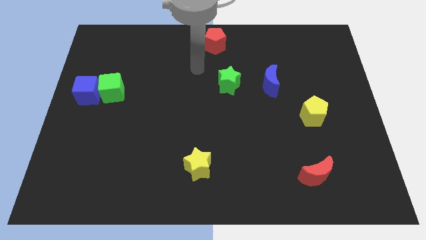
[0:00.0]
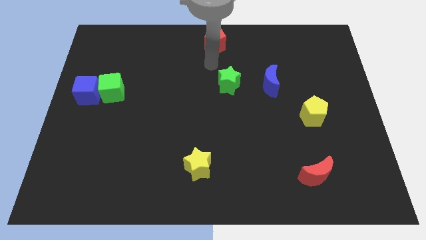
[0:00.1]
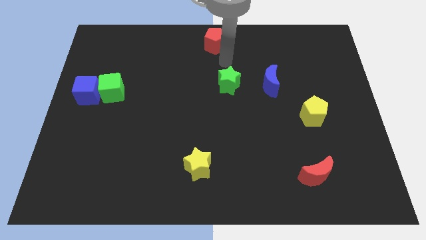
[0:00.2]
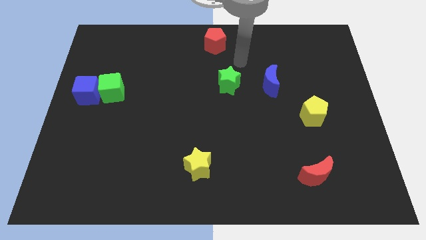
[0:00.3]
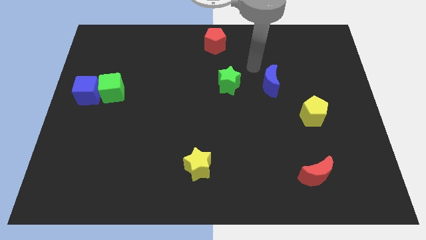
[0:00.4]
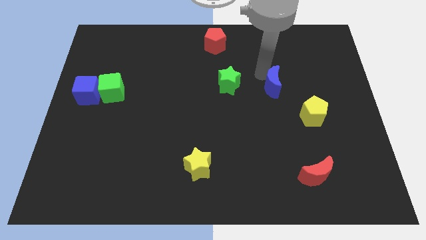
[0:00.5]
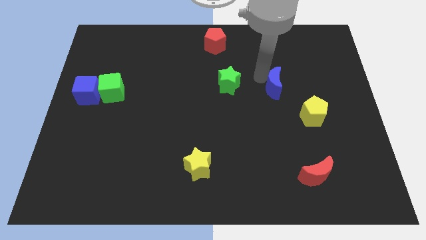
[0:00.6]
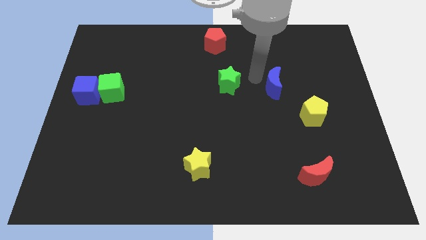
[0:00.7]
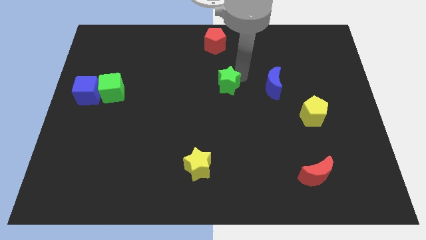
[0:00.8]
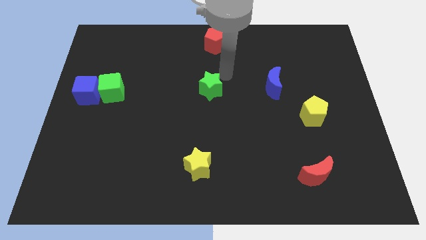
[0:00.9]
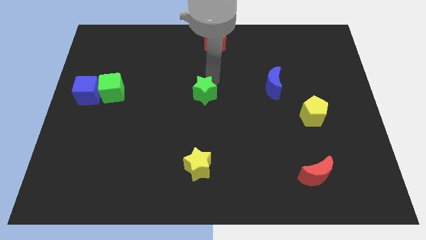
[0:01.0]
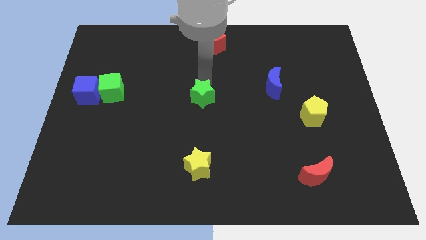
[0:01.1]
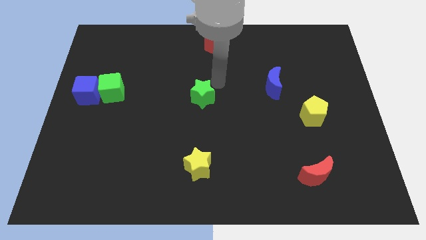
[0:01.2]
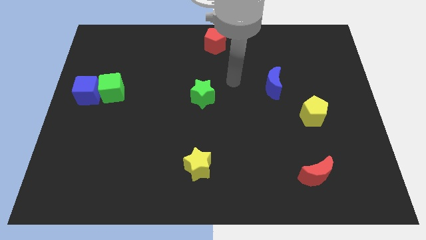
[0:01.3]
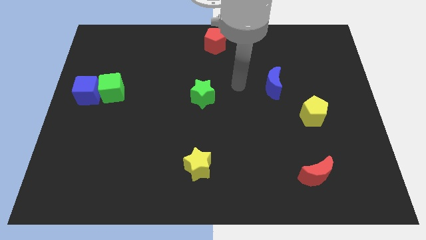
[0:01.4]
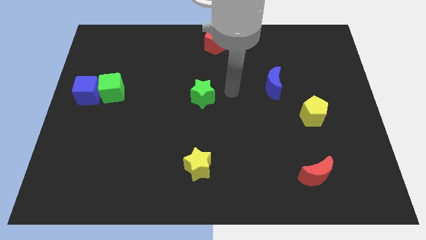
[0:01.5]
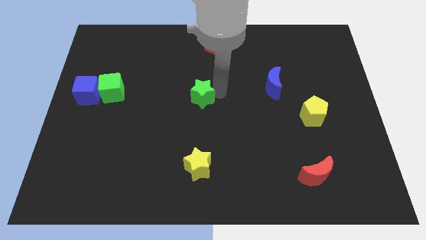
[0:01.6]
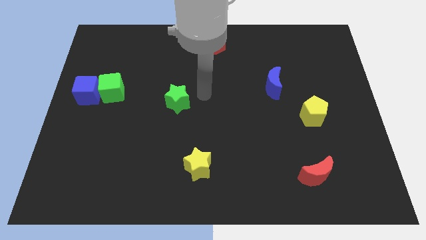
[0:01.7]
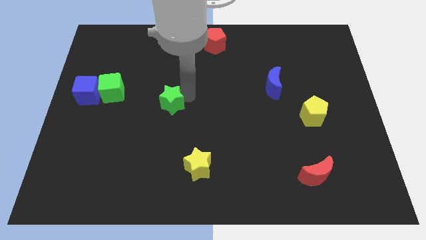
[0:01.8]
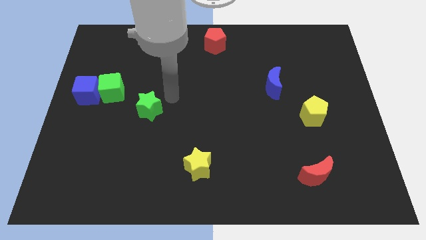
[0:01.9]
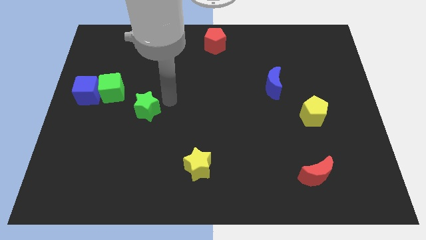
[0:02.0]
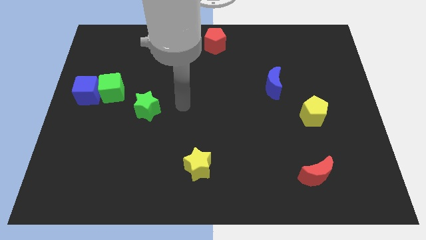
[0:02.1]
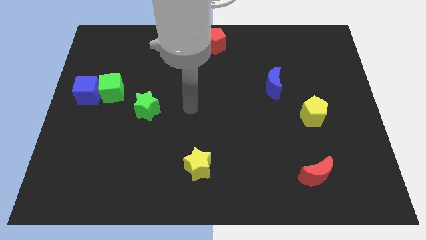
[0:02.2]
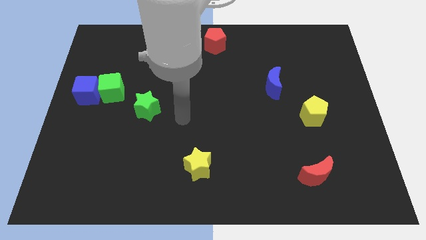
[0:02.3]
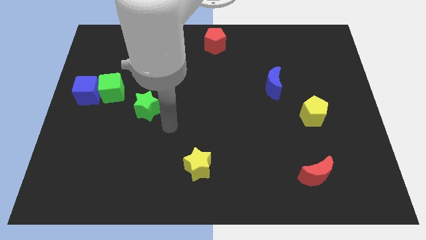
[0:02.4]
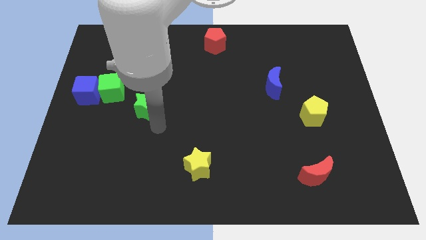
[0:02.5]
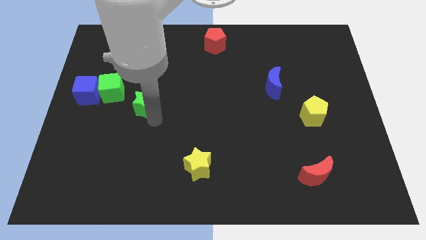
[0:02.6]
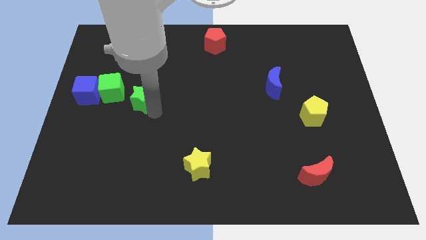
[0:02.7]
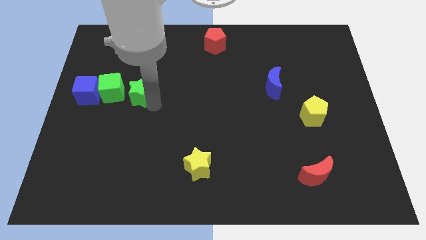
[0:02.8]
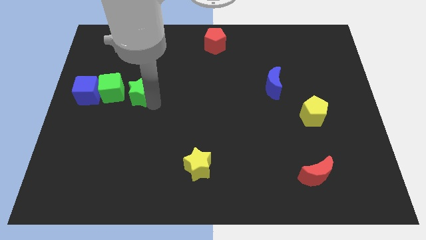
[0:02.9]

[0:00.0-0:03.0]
move green star towards green cube

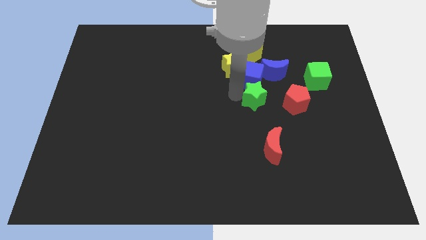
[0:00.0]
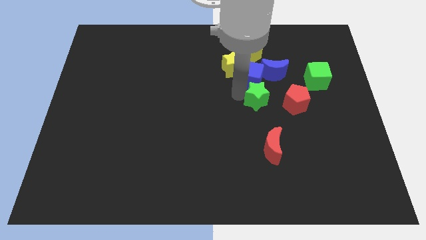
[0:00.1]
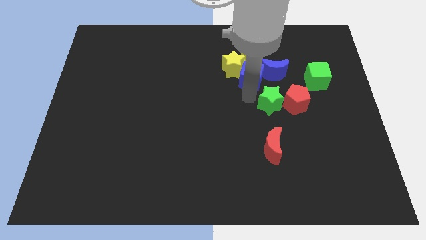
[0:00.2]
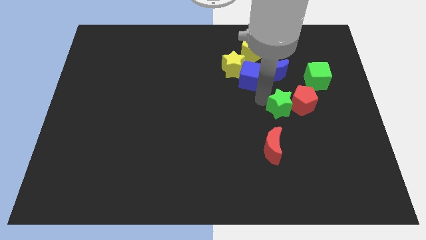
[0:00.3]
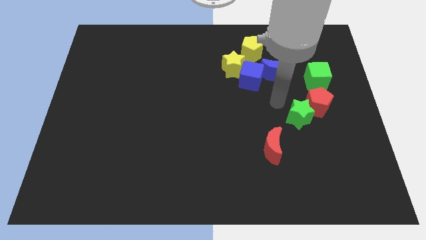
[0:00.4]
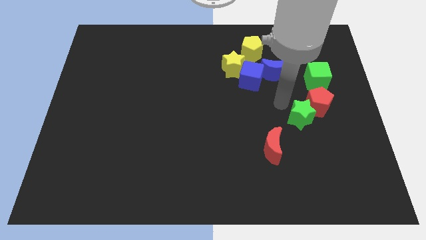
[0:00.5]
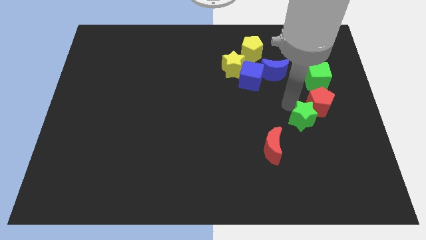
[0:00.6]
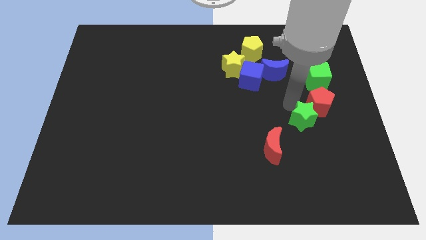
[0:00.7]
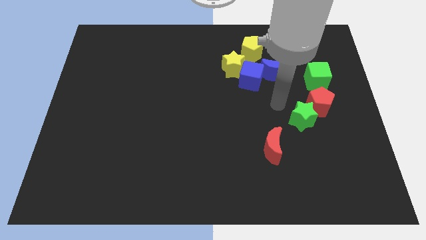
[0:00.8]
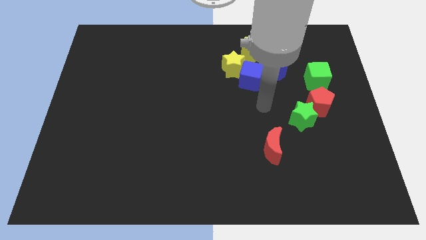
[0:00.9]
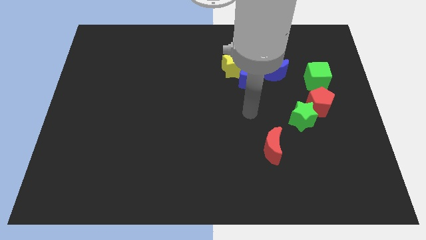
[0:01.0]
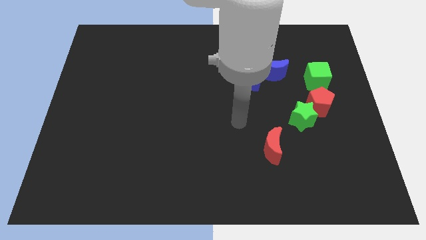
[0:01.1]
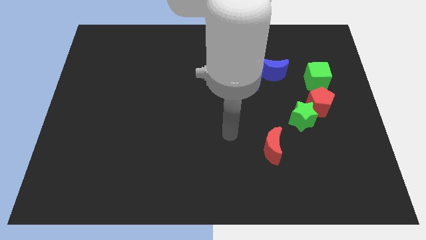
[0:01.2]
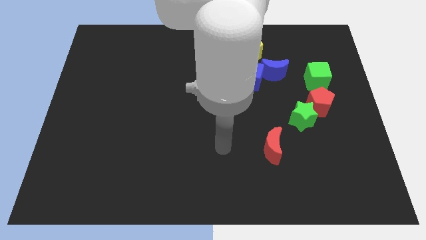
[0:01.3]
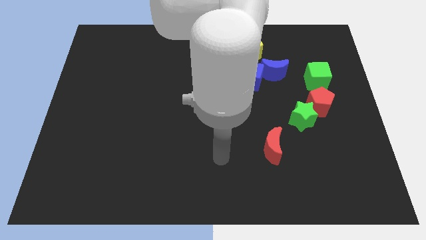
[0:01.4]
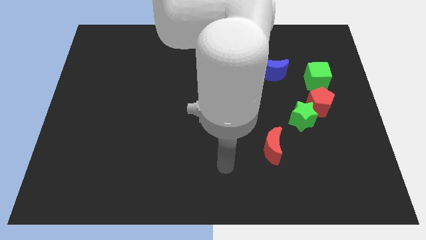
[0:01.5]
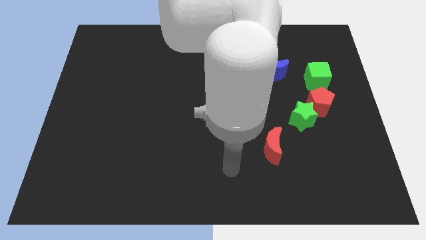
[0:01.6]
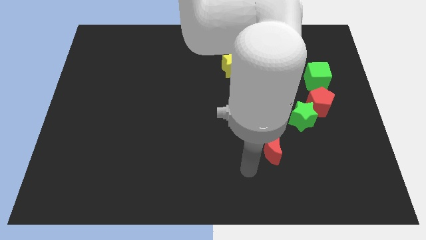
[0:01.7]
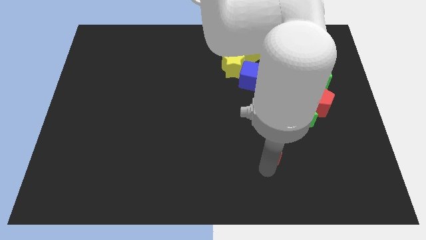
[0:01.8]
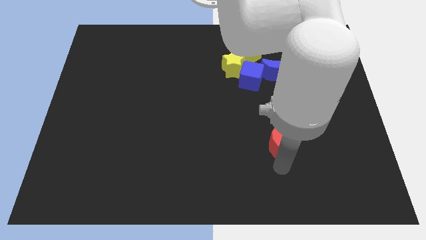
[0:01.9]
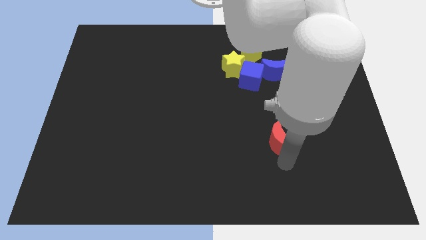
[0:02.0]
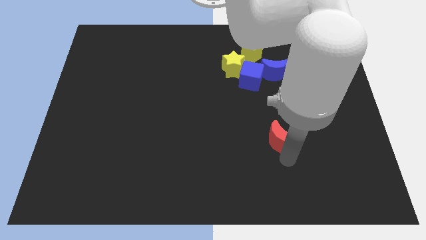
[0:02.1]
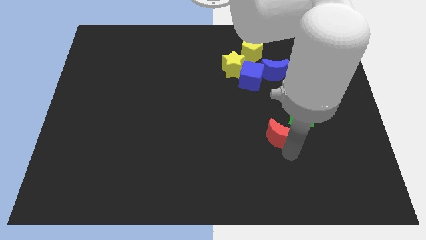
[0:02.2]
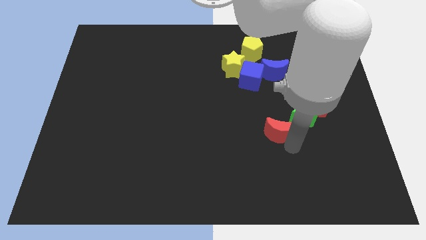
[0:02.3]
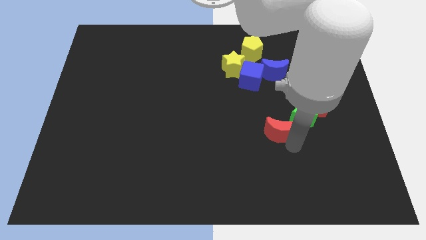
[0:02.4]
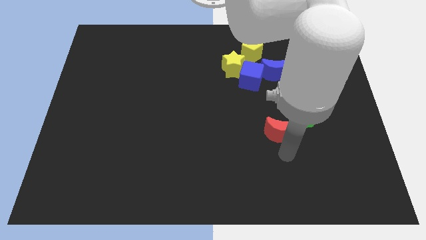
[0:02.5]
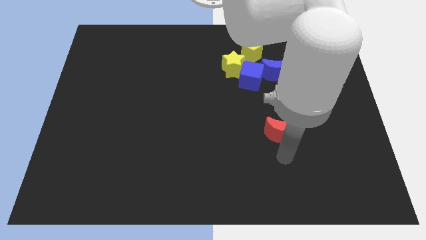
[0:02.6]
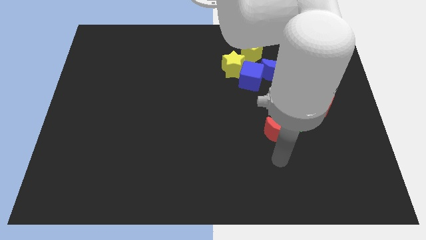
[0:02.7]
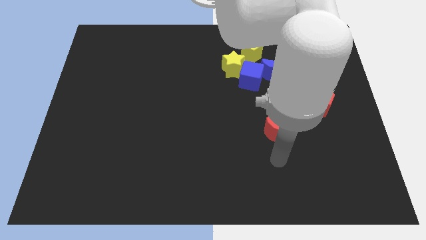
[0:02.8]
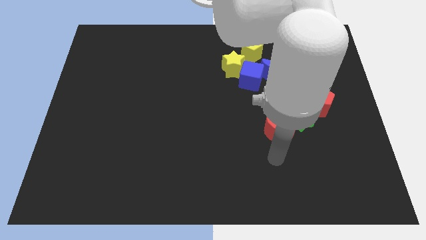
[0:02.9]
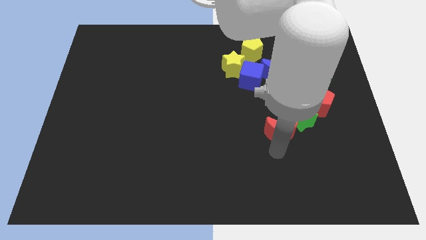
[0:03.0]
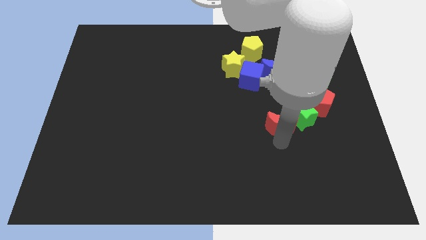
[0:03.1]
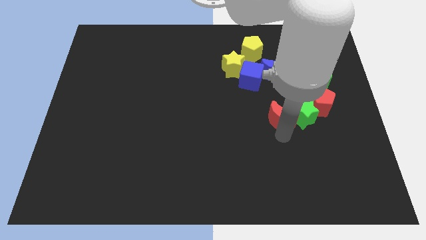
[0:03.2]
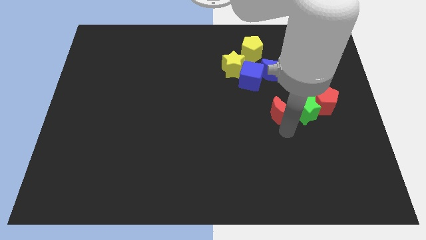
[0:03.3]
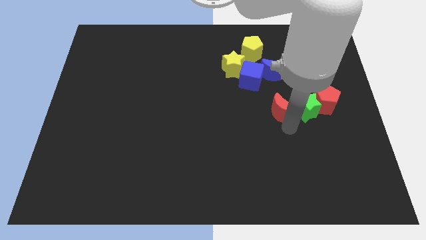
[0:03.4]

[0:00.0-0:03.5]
place the green star in between the red blocks

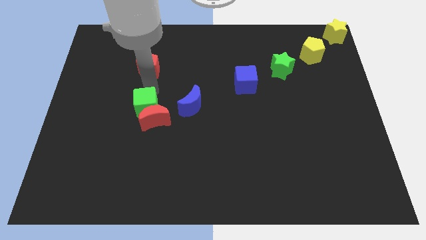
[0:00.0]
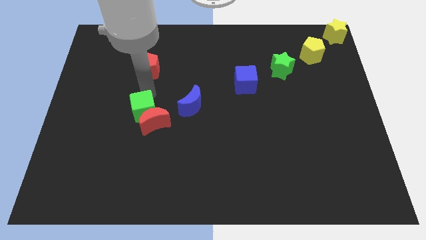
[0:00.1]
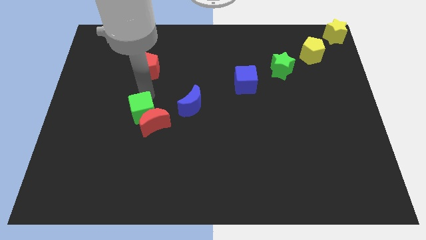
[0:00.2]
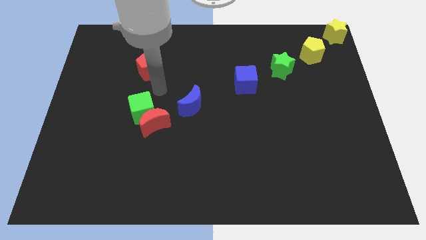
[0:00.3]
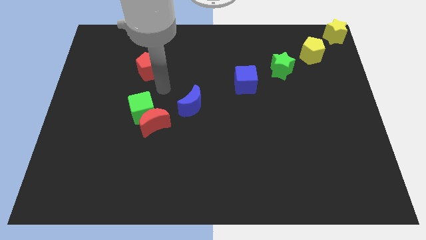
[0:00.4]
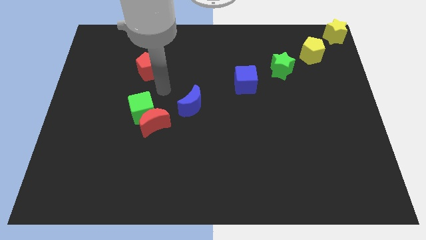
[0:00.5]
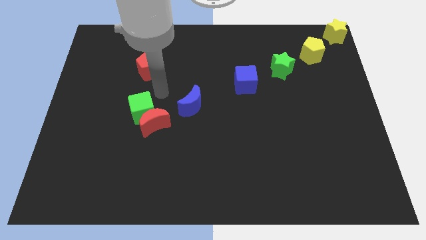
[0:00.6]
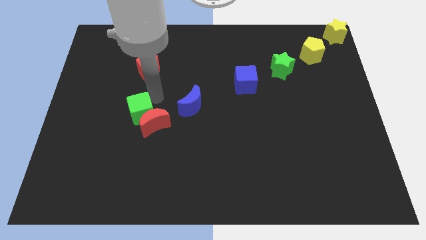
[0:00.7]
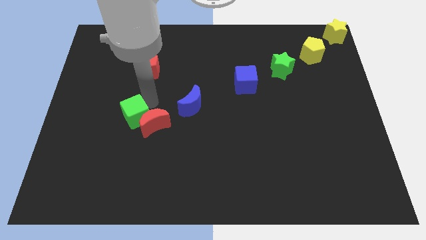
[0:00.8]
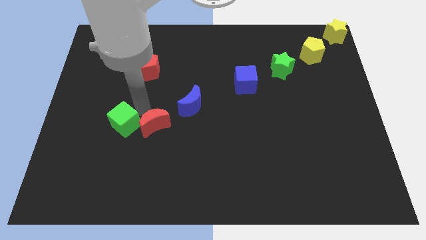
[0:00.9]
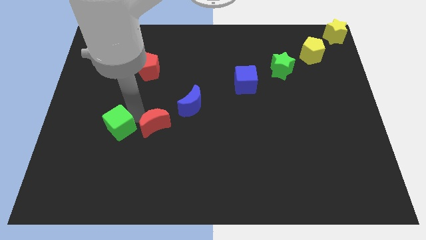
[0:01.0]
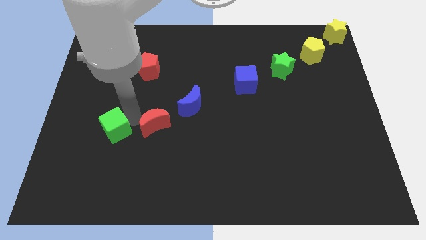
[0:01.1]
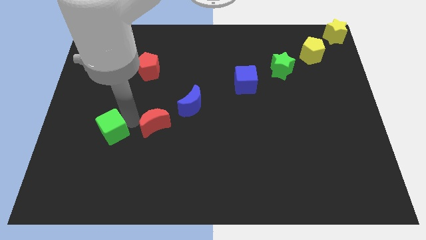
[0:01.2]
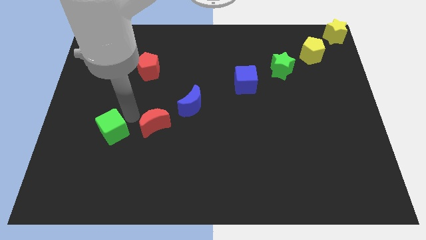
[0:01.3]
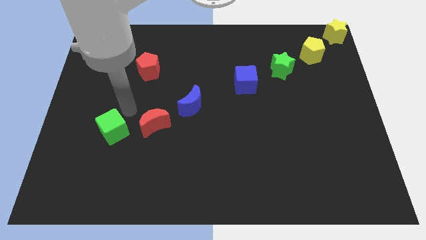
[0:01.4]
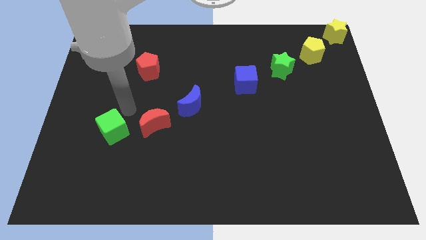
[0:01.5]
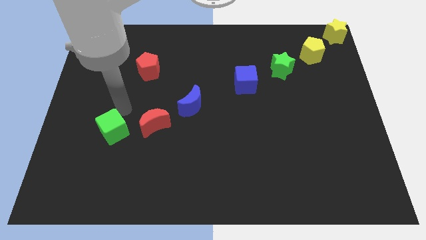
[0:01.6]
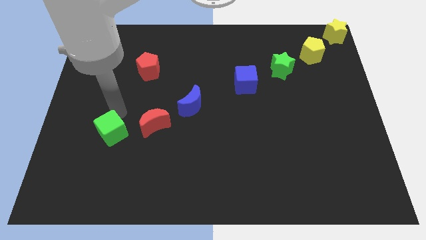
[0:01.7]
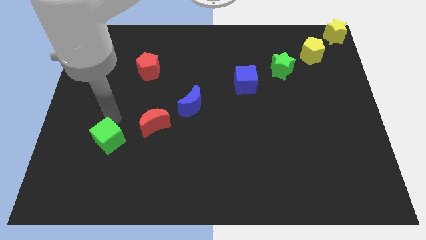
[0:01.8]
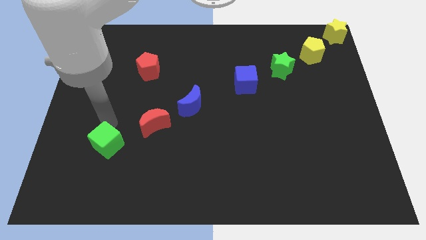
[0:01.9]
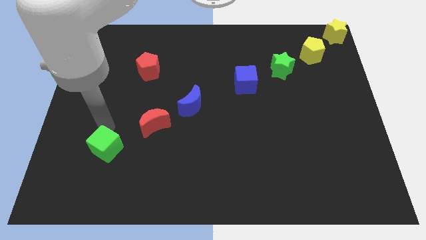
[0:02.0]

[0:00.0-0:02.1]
move the green cube away from the red moon

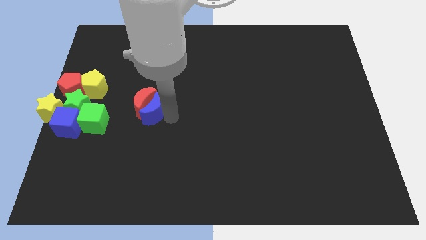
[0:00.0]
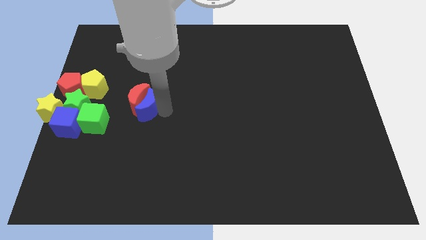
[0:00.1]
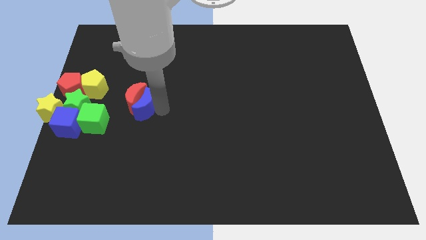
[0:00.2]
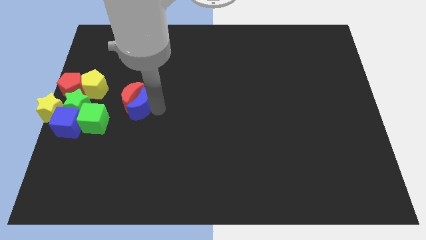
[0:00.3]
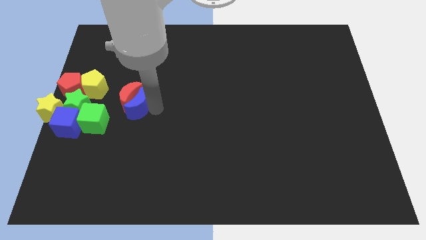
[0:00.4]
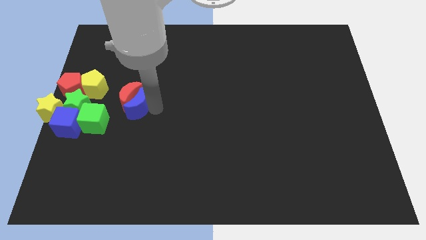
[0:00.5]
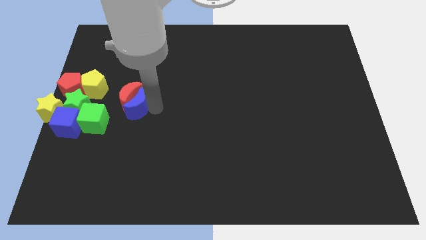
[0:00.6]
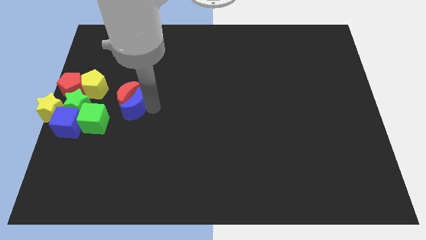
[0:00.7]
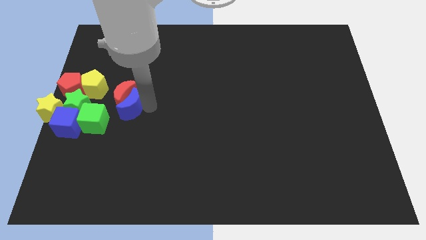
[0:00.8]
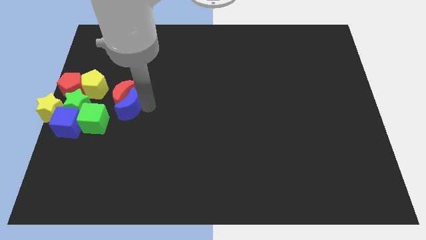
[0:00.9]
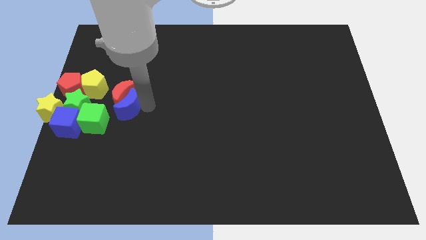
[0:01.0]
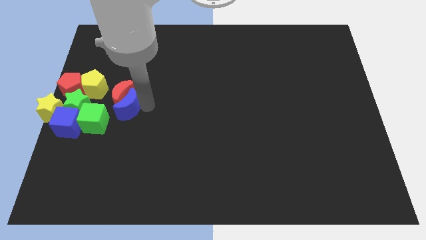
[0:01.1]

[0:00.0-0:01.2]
move the blue crescent and red crescent towards the group of blocks
